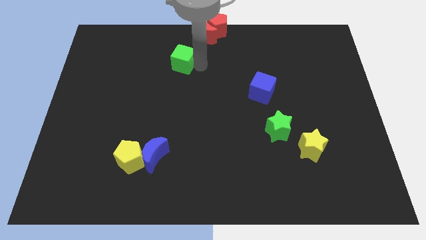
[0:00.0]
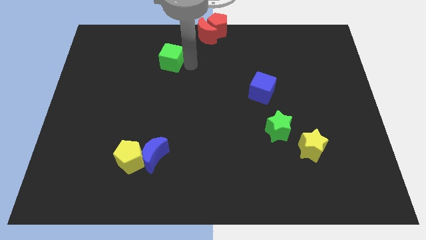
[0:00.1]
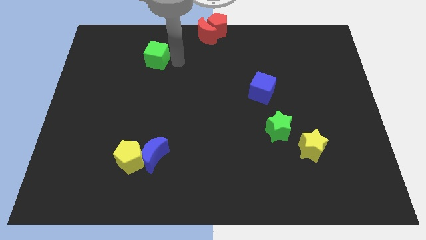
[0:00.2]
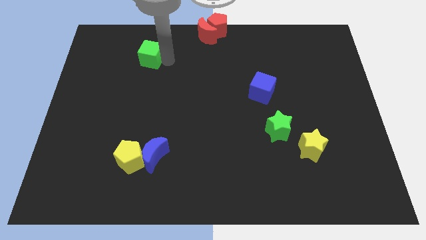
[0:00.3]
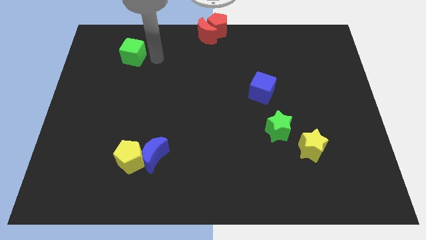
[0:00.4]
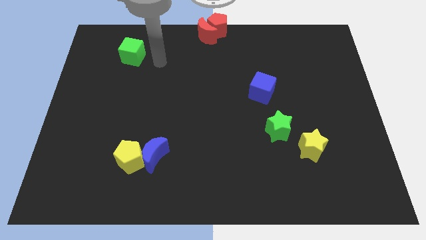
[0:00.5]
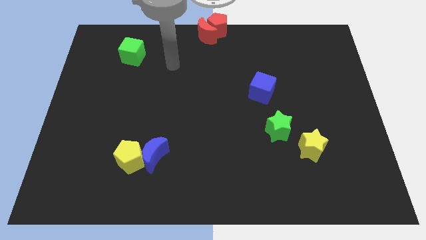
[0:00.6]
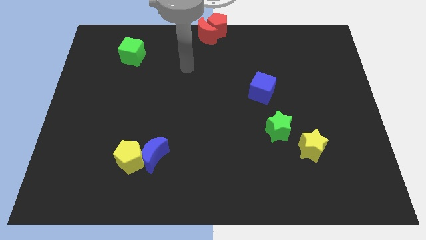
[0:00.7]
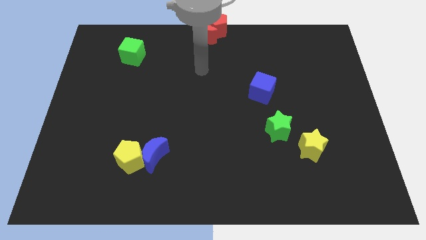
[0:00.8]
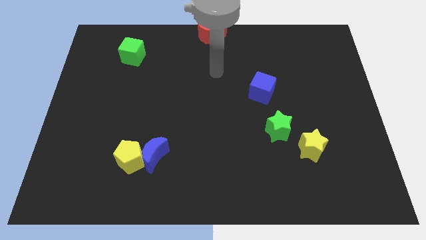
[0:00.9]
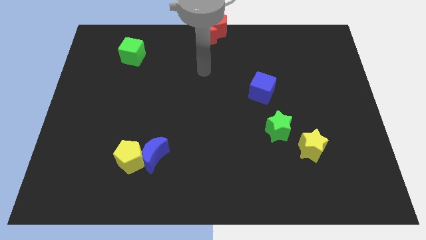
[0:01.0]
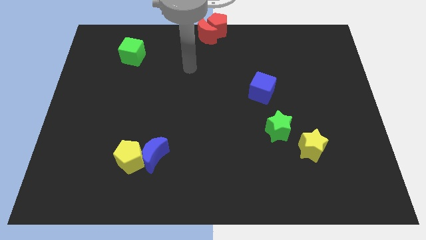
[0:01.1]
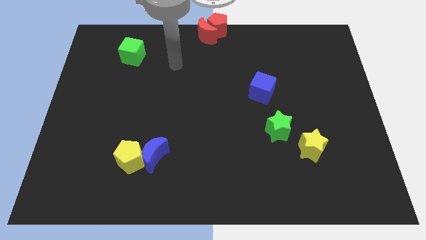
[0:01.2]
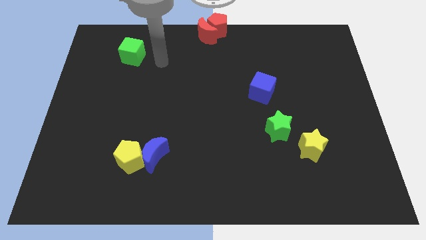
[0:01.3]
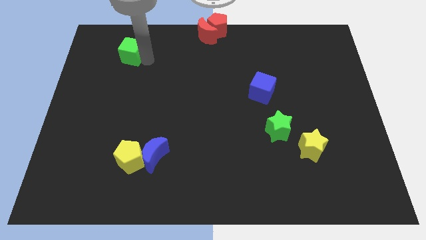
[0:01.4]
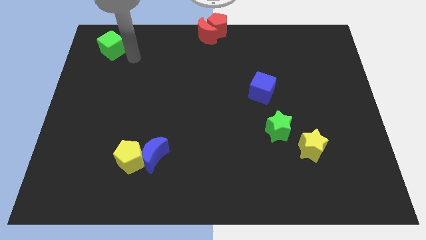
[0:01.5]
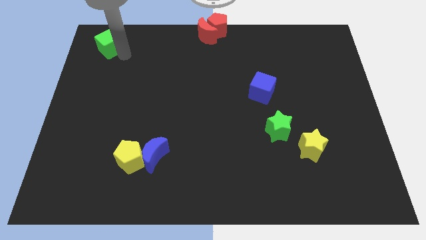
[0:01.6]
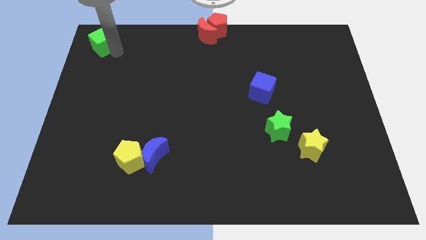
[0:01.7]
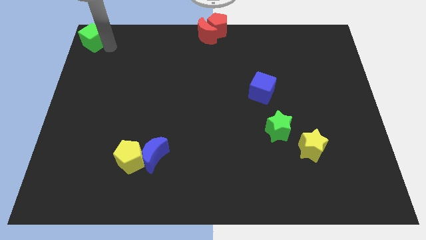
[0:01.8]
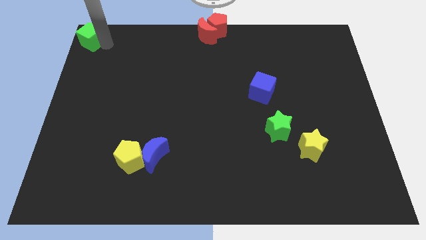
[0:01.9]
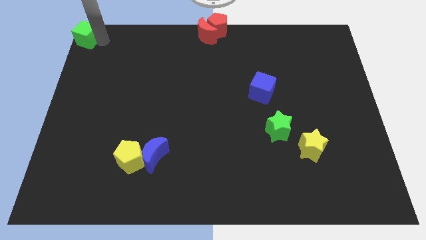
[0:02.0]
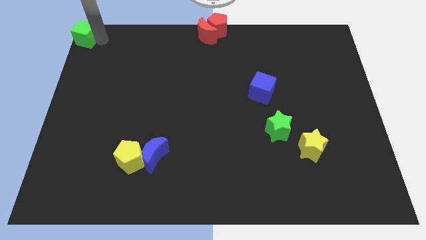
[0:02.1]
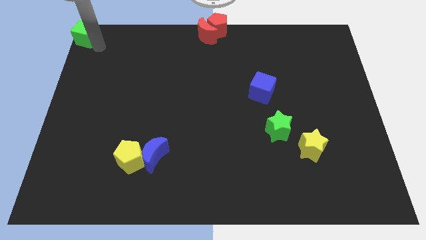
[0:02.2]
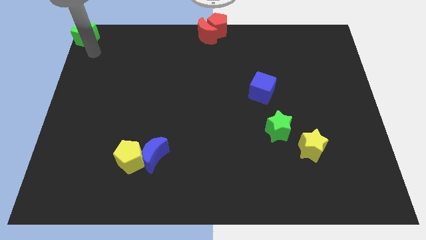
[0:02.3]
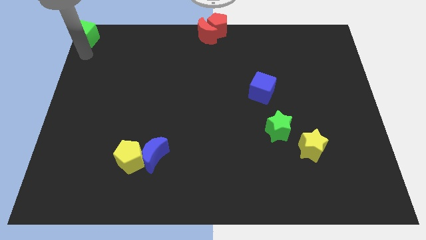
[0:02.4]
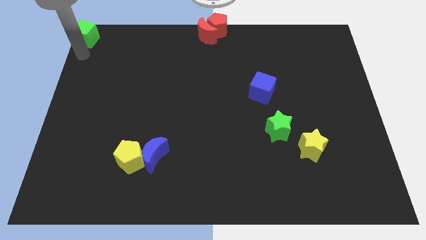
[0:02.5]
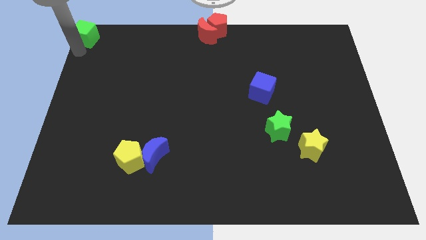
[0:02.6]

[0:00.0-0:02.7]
push the green cube towards the top left corner of the board

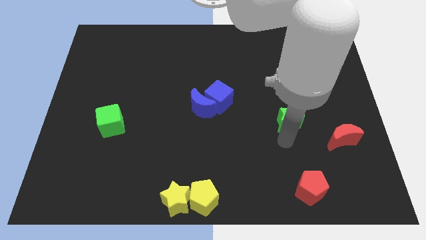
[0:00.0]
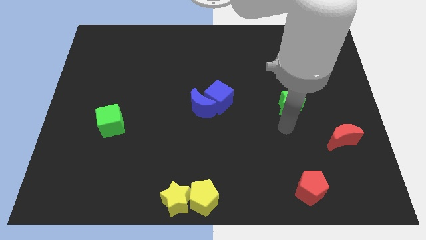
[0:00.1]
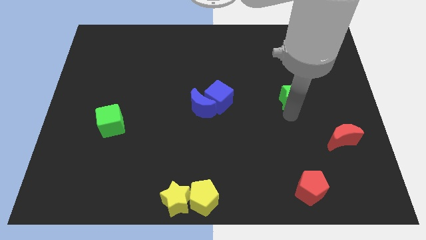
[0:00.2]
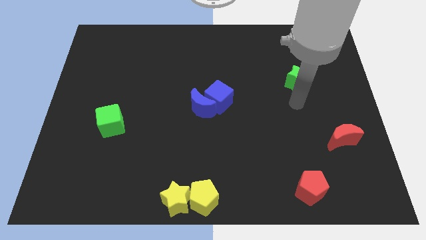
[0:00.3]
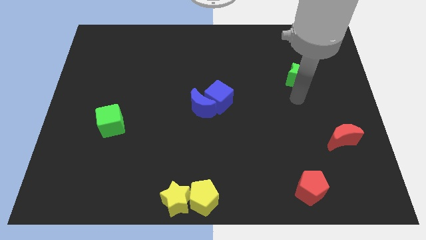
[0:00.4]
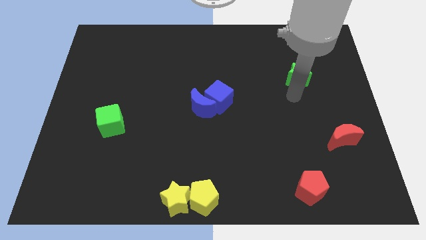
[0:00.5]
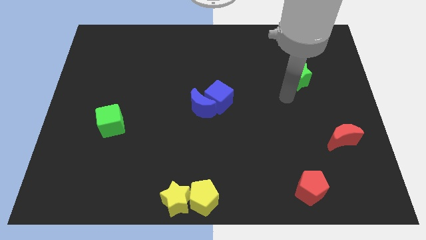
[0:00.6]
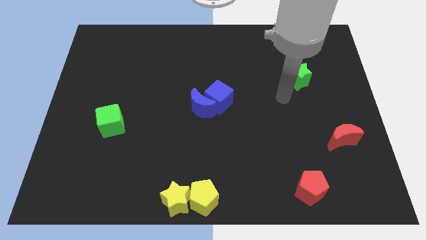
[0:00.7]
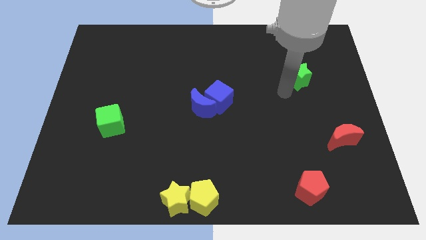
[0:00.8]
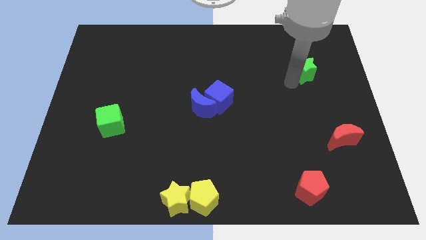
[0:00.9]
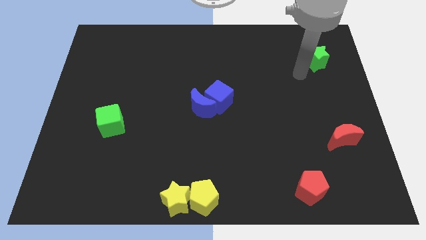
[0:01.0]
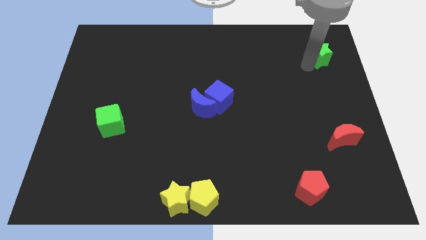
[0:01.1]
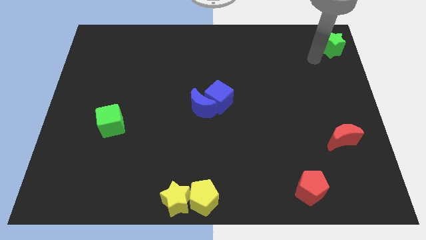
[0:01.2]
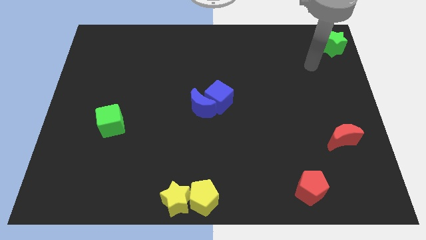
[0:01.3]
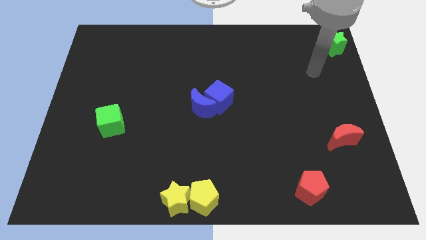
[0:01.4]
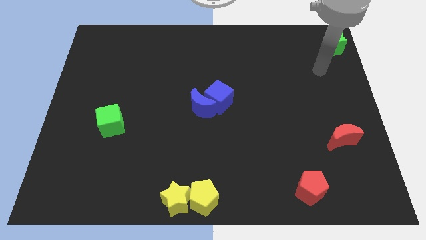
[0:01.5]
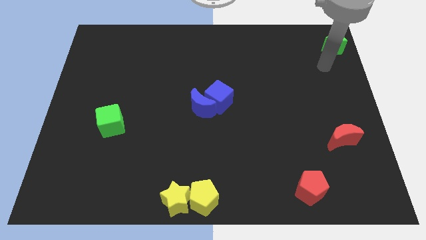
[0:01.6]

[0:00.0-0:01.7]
push the green star to the top right side

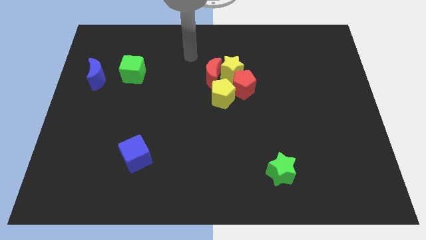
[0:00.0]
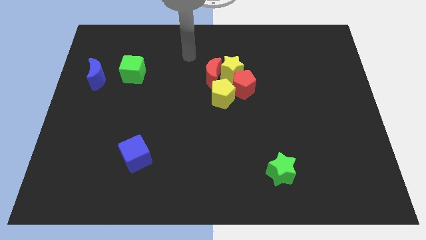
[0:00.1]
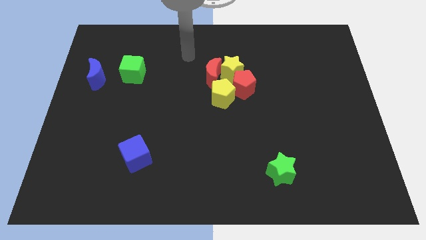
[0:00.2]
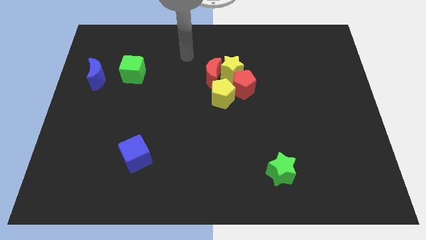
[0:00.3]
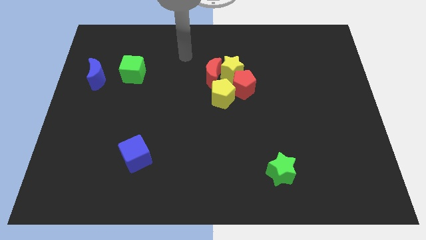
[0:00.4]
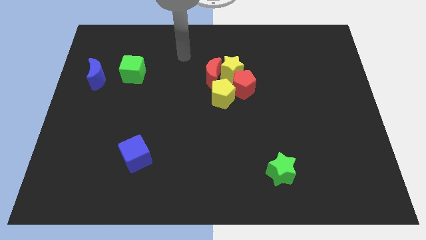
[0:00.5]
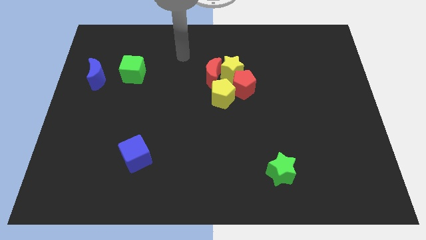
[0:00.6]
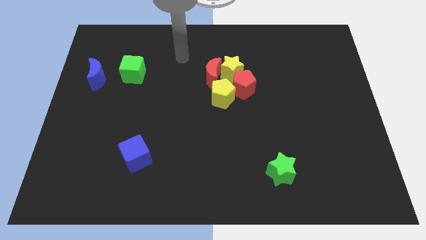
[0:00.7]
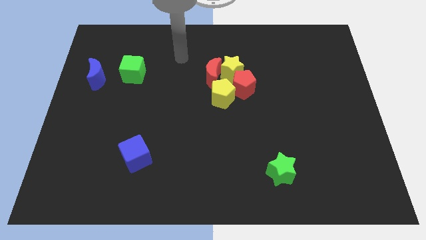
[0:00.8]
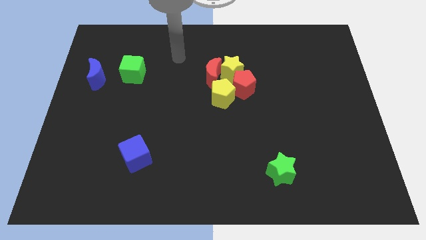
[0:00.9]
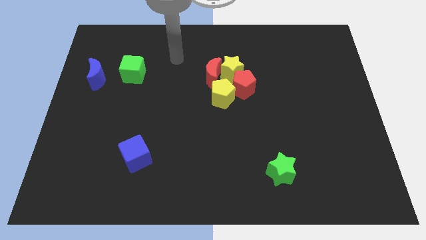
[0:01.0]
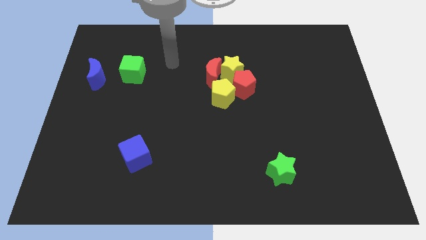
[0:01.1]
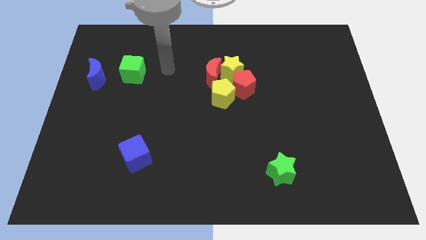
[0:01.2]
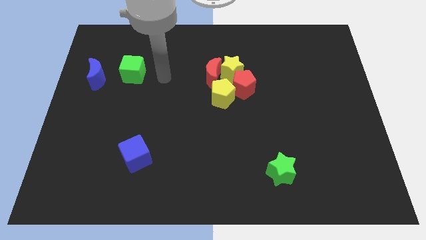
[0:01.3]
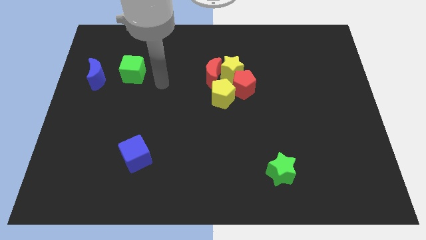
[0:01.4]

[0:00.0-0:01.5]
place your arm at the right of the green cube

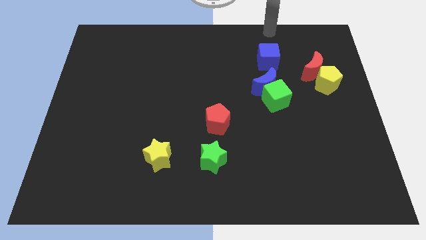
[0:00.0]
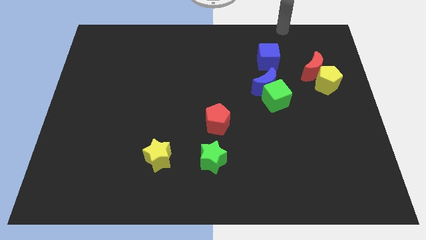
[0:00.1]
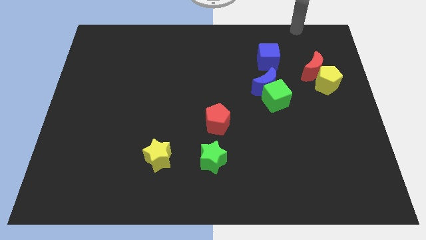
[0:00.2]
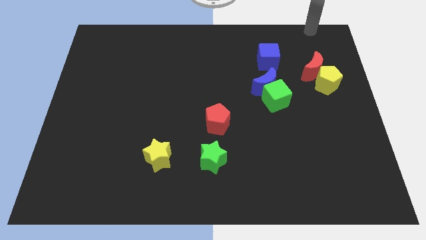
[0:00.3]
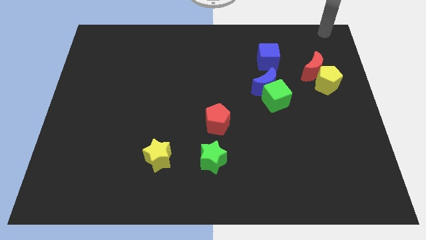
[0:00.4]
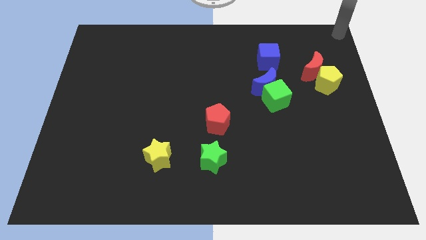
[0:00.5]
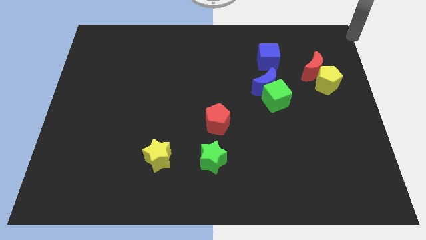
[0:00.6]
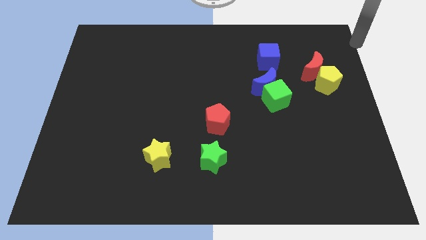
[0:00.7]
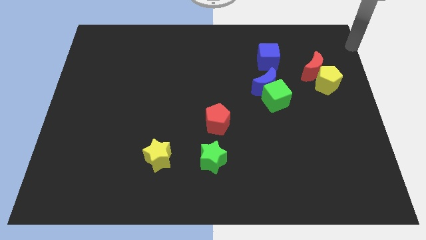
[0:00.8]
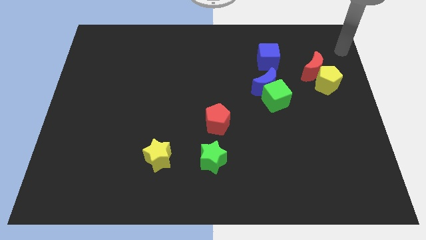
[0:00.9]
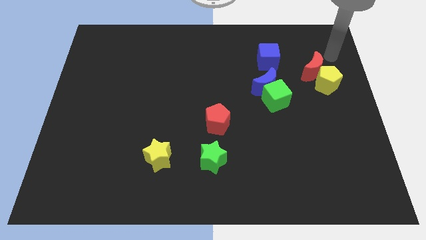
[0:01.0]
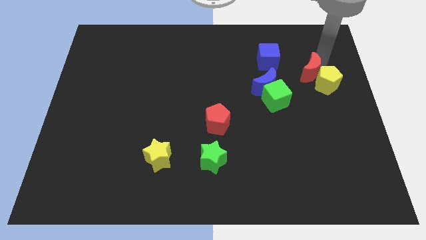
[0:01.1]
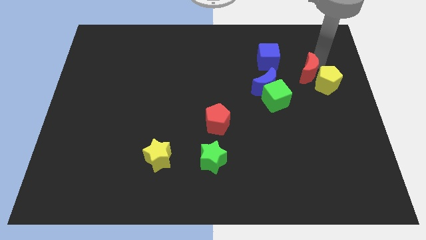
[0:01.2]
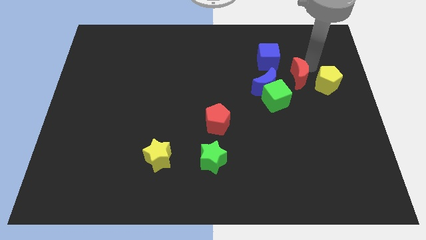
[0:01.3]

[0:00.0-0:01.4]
separate red moon from the yellow pentagon

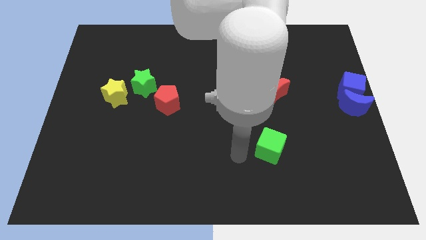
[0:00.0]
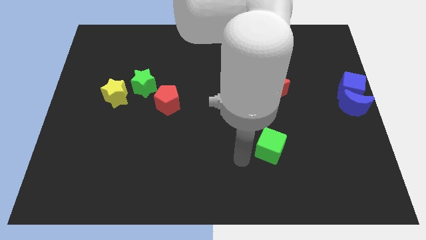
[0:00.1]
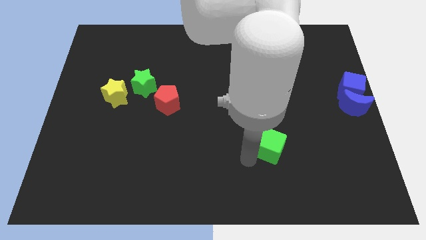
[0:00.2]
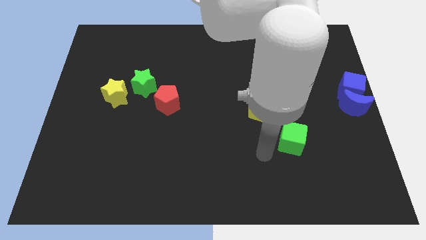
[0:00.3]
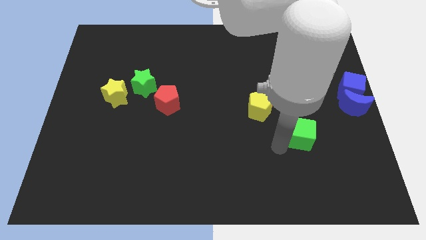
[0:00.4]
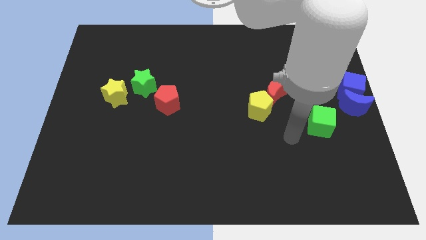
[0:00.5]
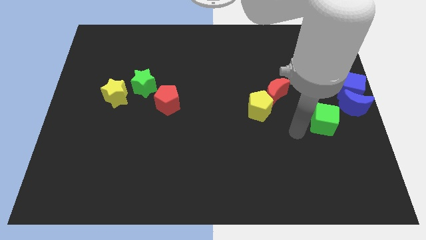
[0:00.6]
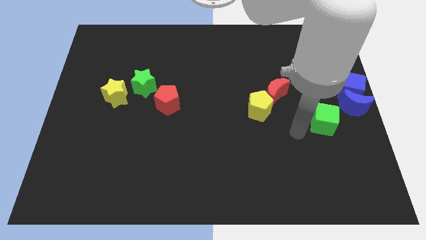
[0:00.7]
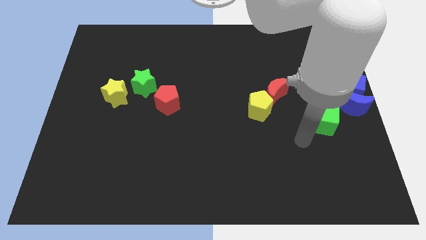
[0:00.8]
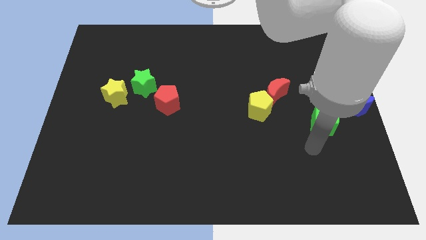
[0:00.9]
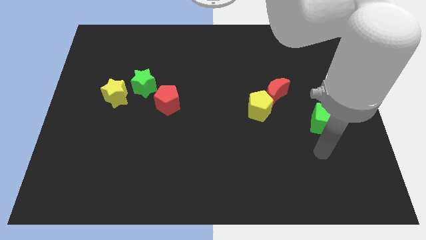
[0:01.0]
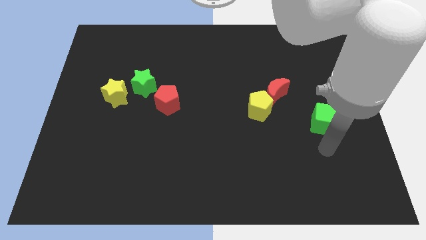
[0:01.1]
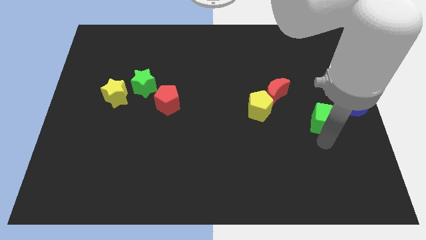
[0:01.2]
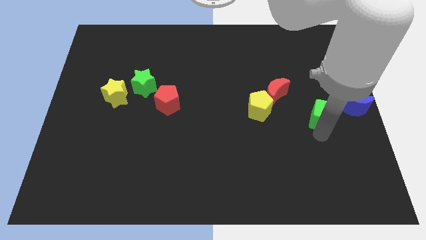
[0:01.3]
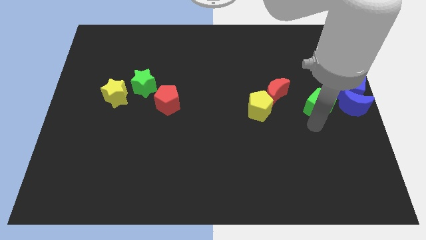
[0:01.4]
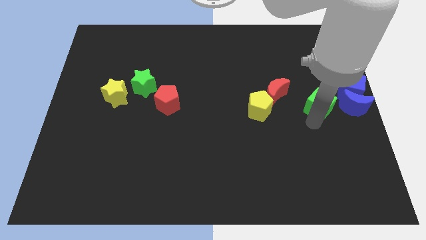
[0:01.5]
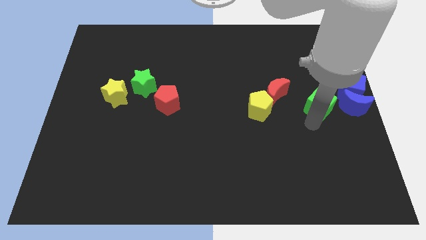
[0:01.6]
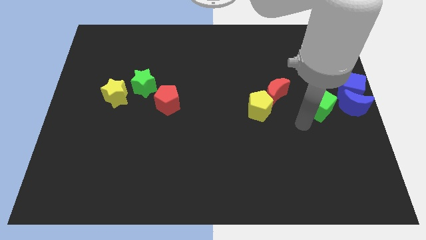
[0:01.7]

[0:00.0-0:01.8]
push the green cube to the left side of the blue crescent
